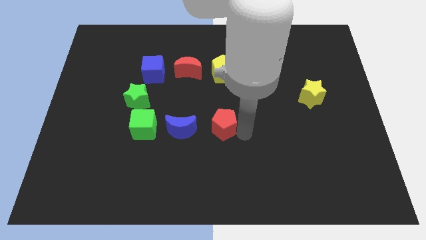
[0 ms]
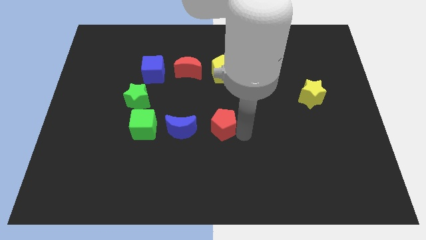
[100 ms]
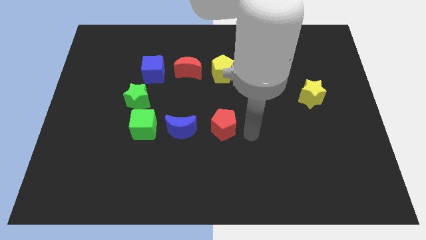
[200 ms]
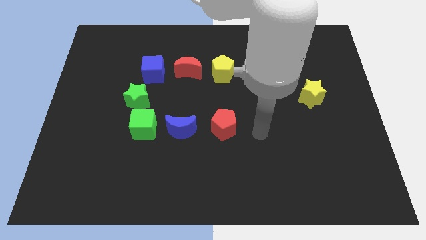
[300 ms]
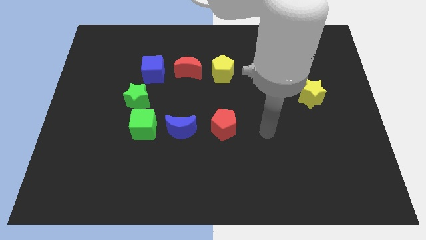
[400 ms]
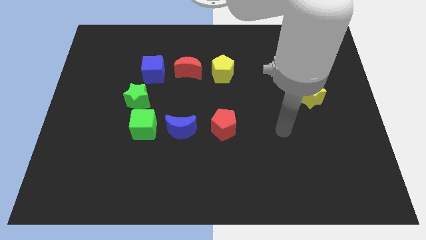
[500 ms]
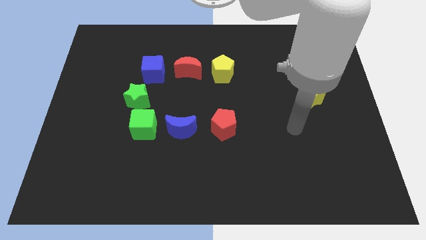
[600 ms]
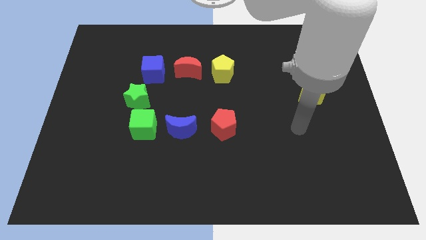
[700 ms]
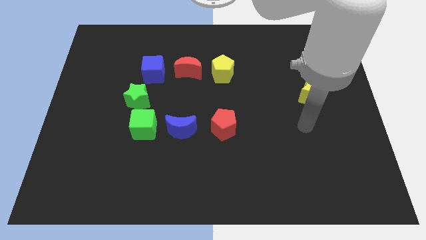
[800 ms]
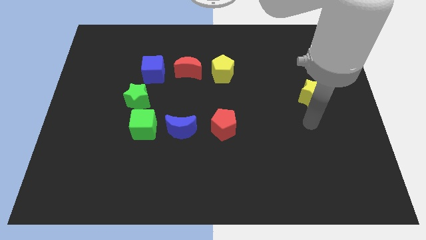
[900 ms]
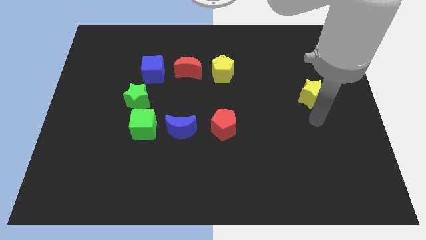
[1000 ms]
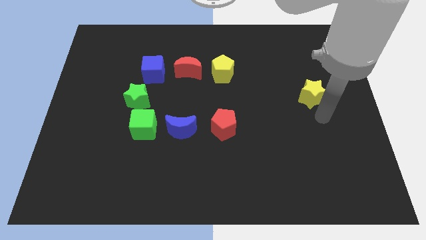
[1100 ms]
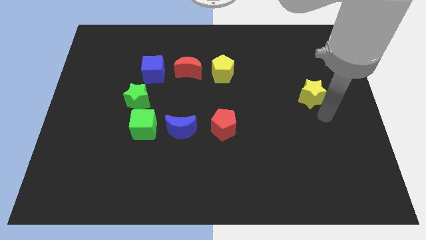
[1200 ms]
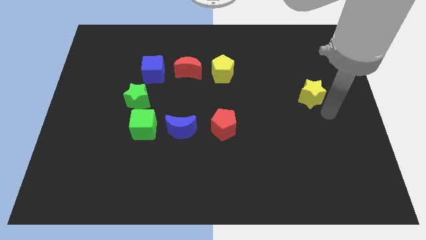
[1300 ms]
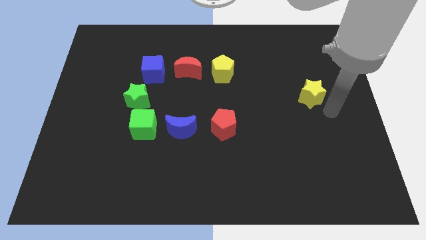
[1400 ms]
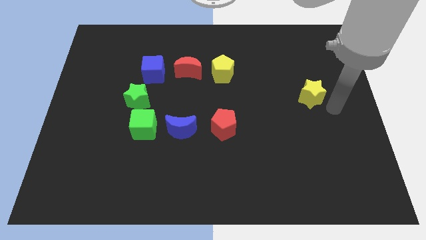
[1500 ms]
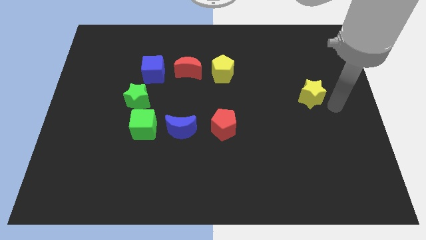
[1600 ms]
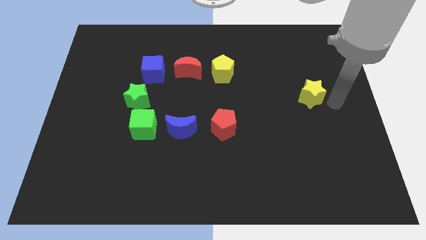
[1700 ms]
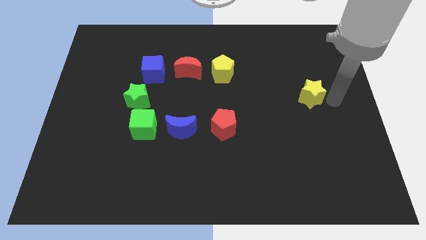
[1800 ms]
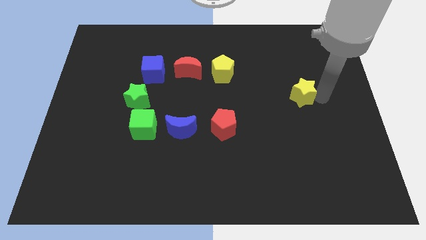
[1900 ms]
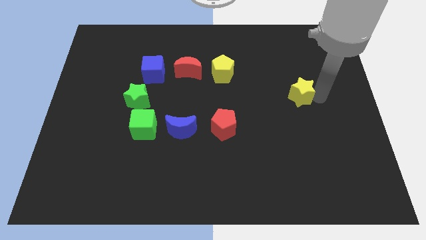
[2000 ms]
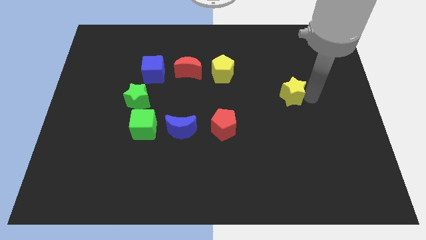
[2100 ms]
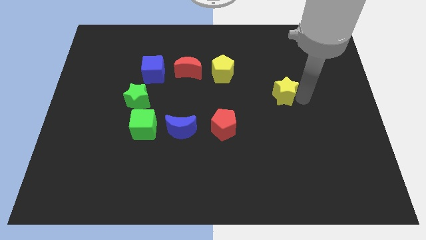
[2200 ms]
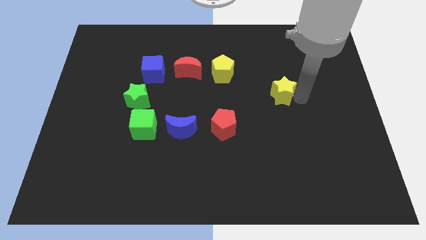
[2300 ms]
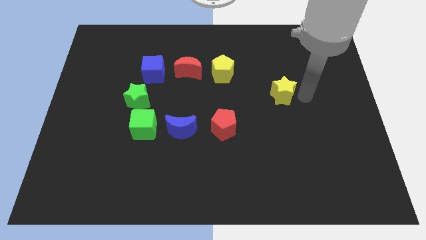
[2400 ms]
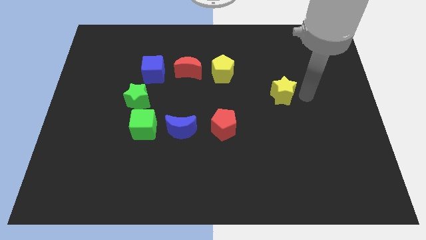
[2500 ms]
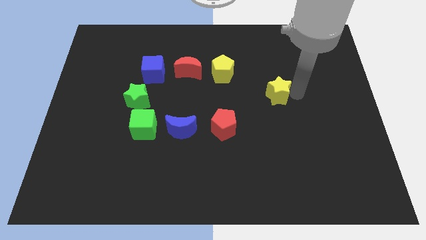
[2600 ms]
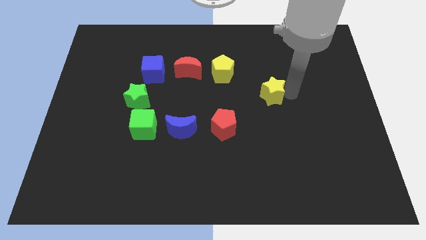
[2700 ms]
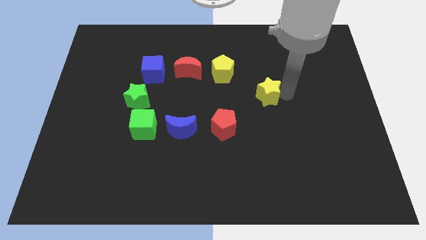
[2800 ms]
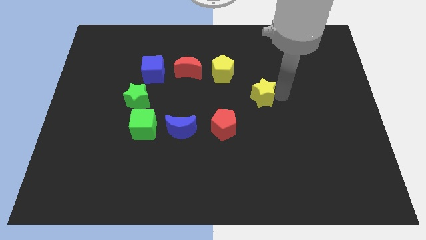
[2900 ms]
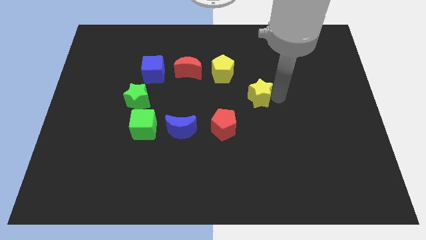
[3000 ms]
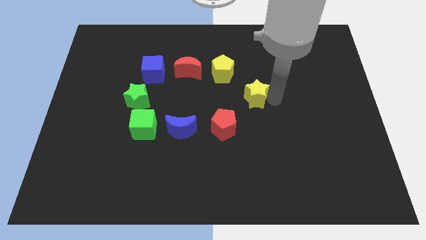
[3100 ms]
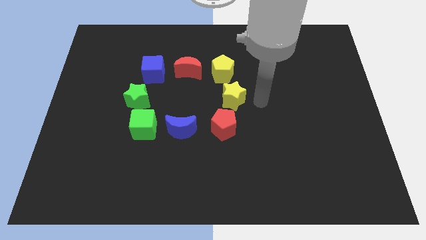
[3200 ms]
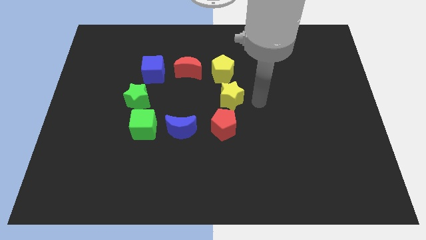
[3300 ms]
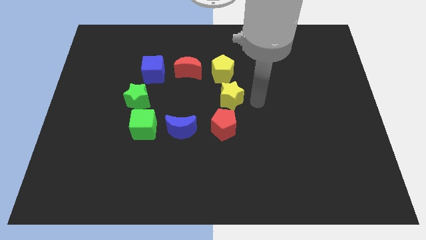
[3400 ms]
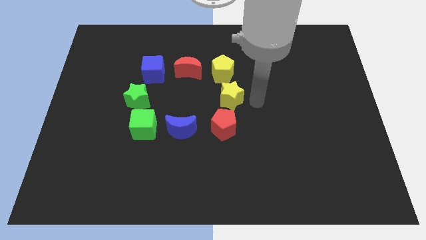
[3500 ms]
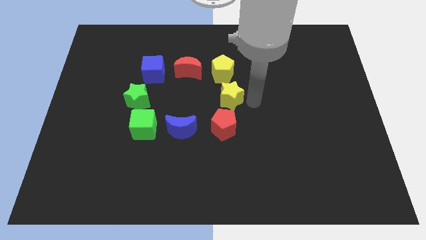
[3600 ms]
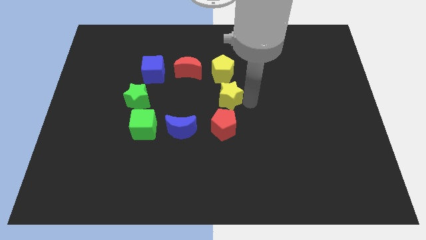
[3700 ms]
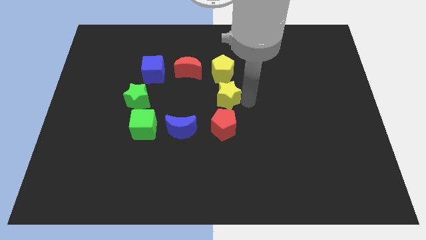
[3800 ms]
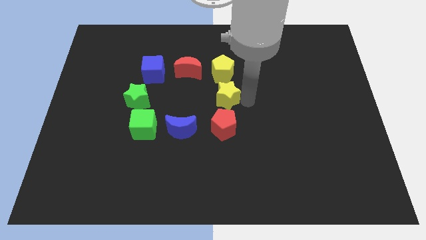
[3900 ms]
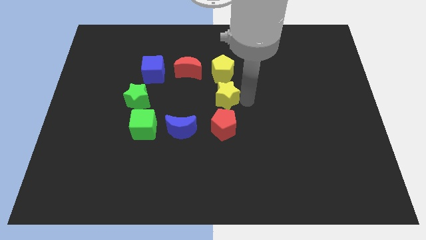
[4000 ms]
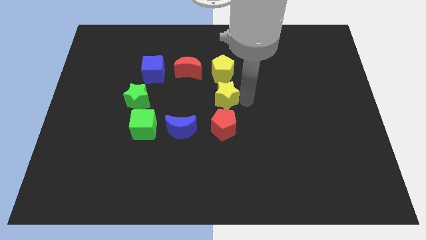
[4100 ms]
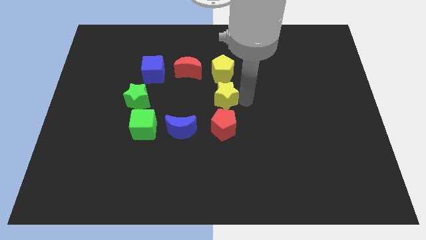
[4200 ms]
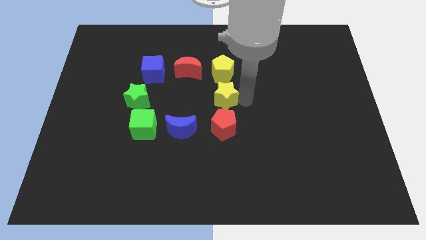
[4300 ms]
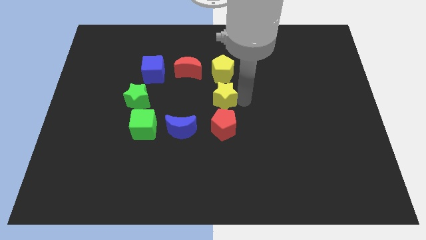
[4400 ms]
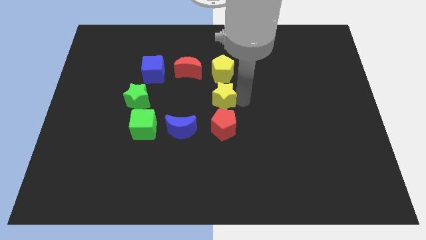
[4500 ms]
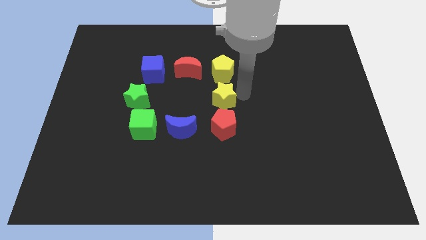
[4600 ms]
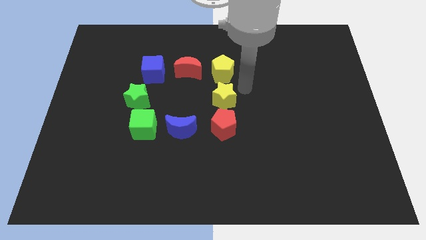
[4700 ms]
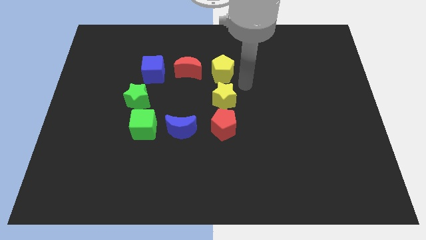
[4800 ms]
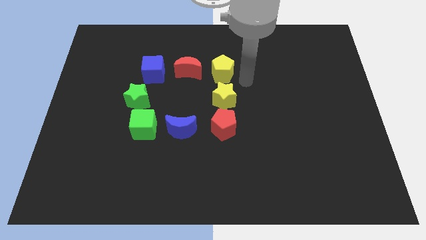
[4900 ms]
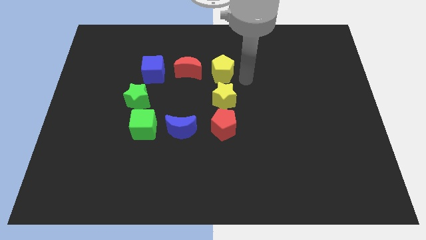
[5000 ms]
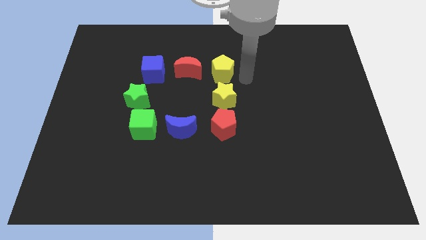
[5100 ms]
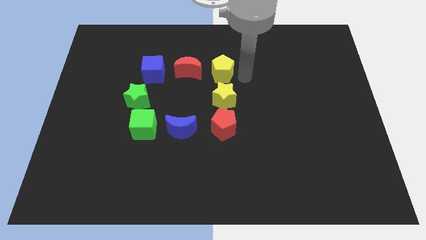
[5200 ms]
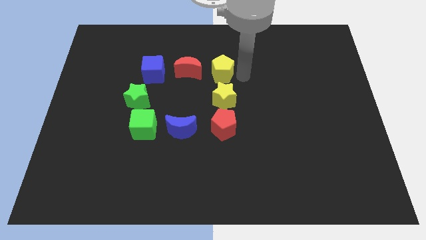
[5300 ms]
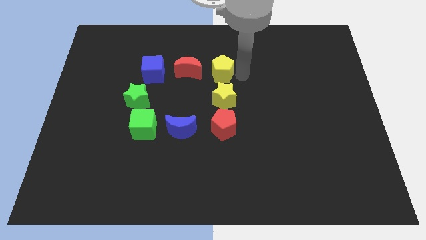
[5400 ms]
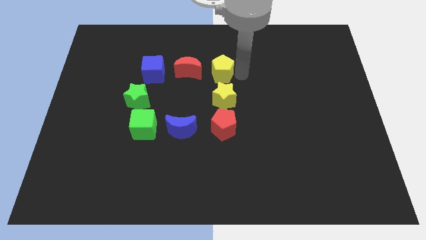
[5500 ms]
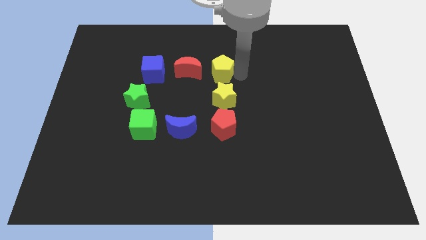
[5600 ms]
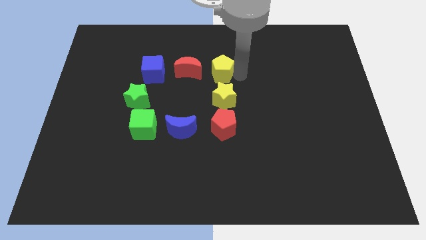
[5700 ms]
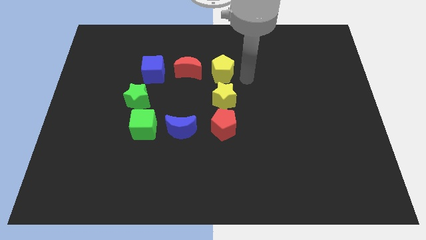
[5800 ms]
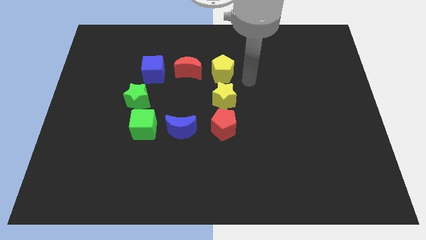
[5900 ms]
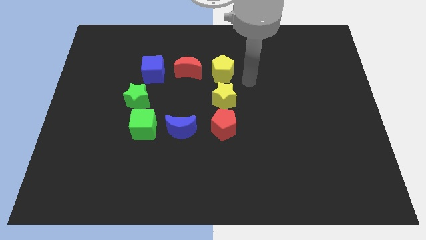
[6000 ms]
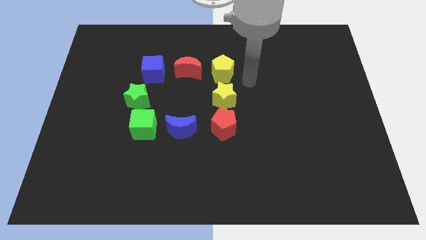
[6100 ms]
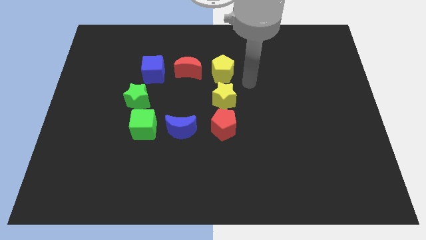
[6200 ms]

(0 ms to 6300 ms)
move the yellow star in between the yellow pentagon and red pentagon

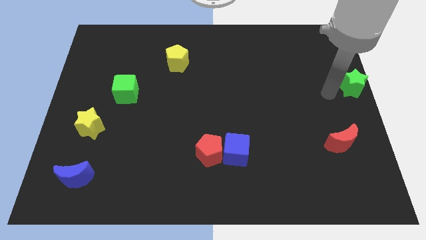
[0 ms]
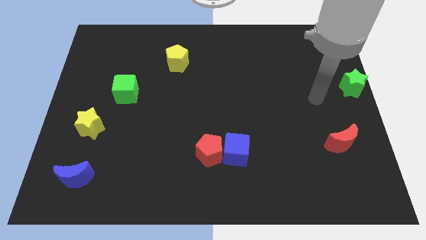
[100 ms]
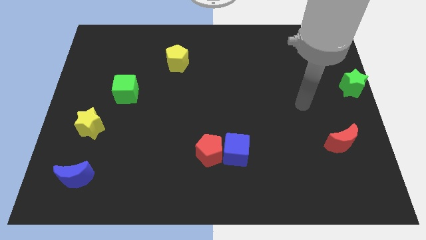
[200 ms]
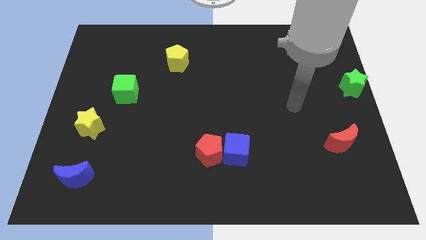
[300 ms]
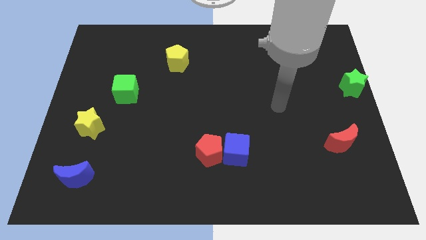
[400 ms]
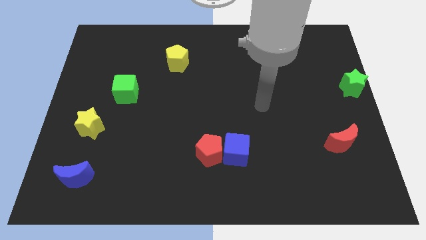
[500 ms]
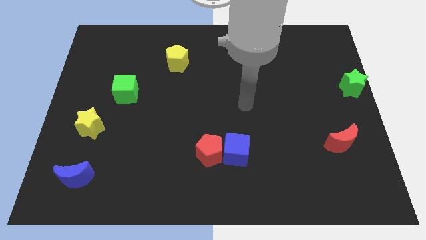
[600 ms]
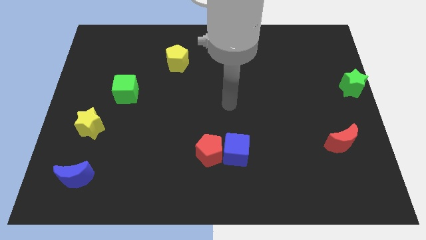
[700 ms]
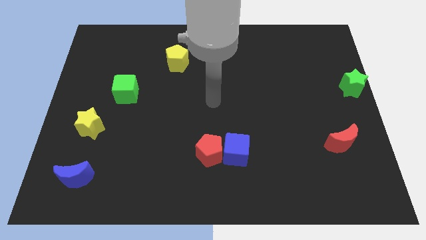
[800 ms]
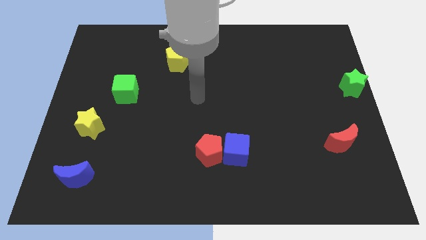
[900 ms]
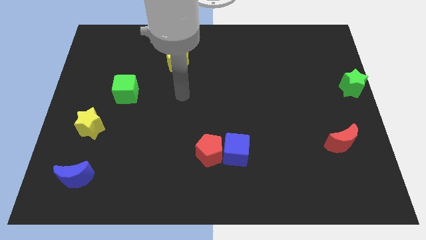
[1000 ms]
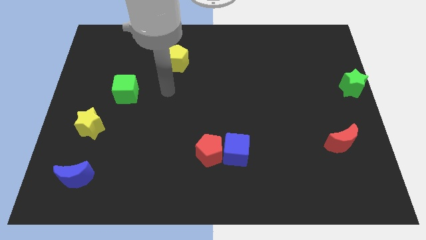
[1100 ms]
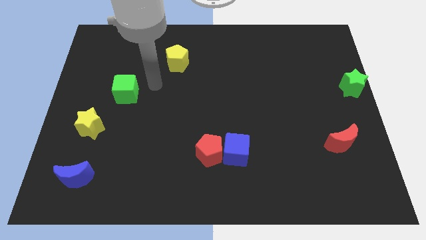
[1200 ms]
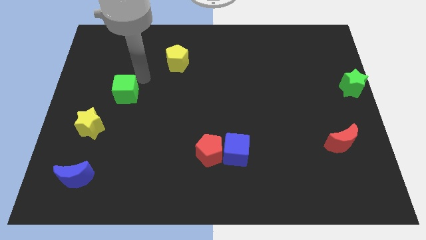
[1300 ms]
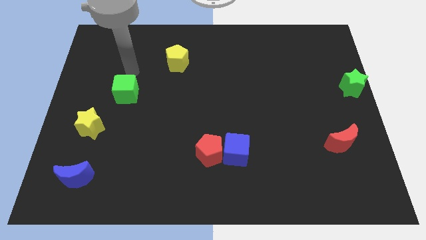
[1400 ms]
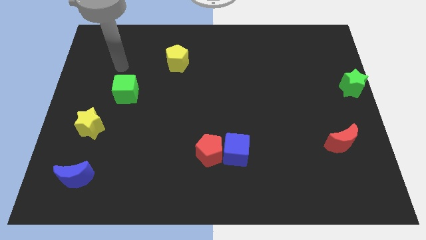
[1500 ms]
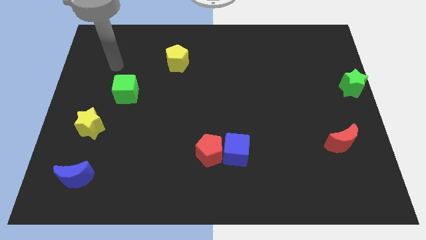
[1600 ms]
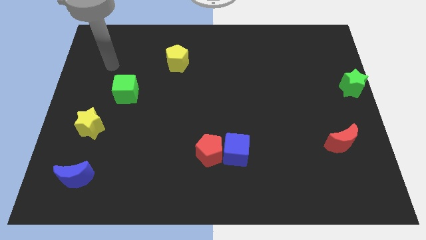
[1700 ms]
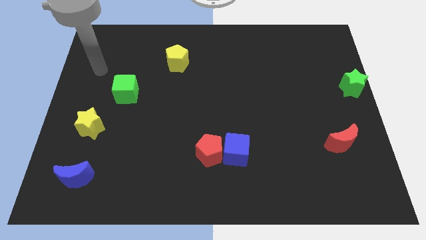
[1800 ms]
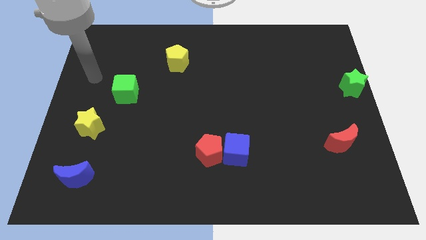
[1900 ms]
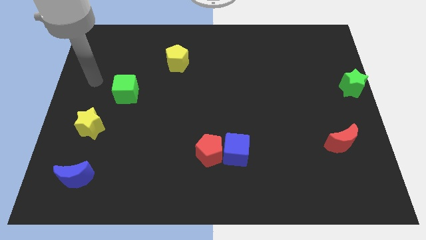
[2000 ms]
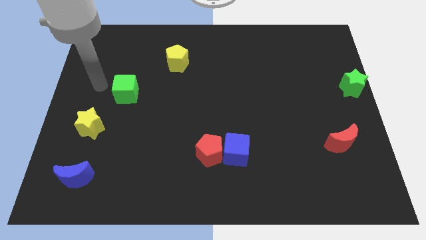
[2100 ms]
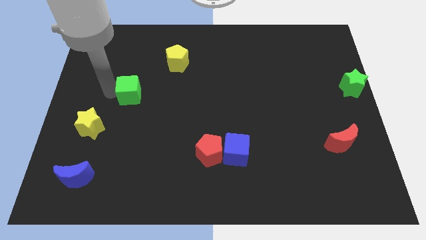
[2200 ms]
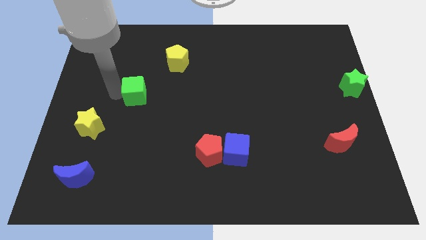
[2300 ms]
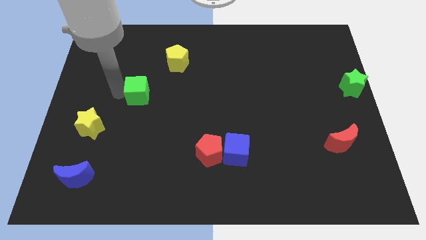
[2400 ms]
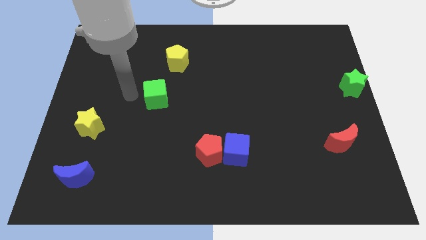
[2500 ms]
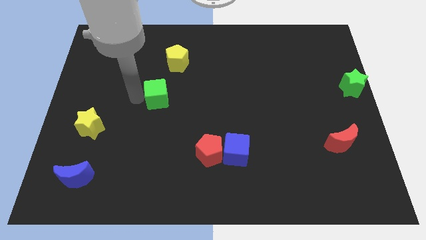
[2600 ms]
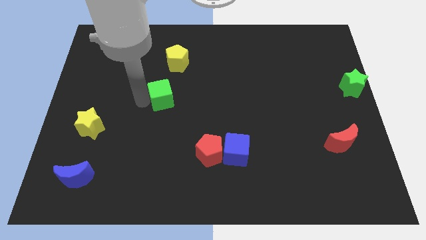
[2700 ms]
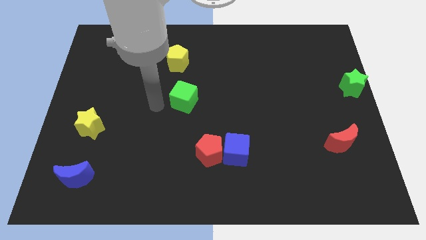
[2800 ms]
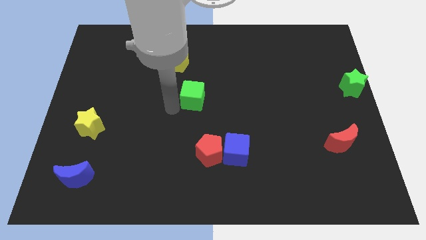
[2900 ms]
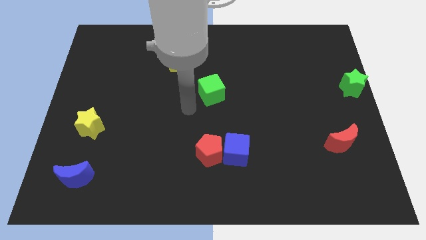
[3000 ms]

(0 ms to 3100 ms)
place the green cube in center of the board
